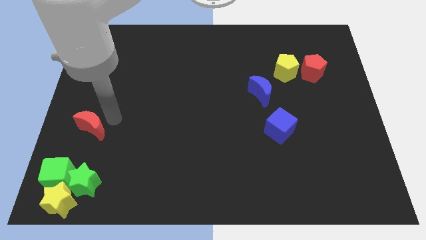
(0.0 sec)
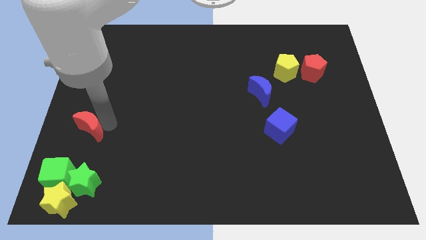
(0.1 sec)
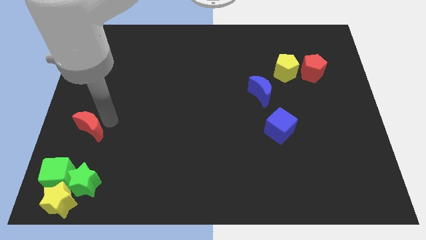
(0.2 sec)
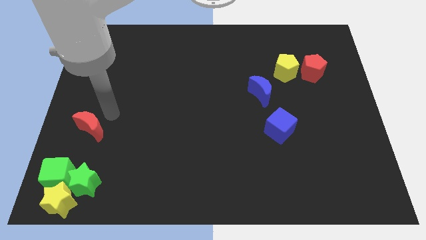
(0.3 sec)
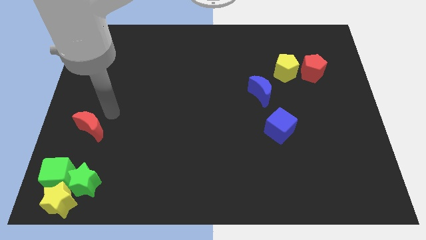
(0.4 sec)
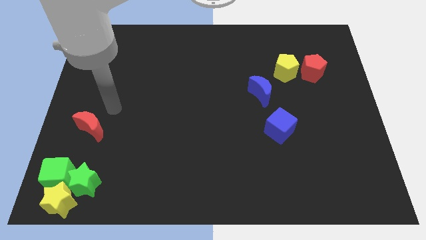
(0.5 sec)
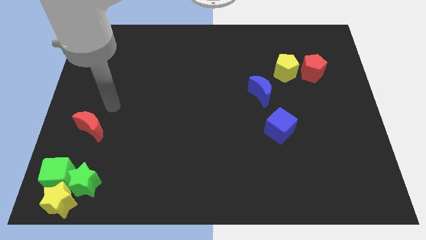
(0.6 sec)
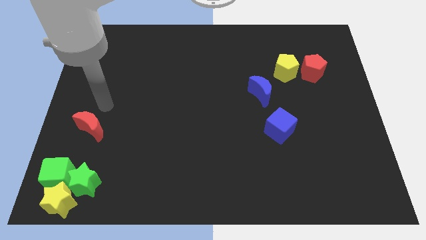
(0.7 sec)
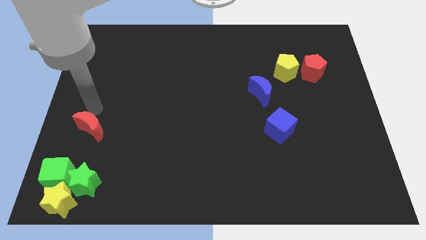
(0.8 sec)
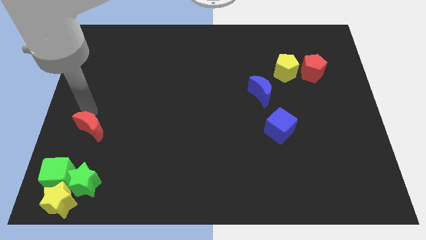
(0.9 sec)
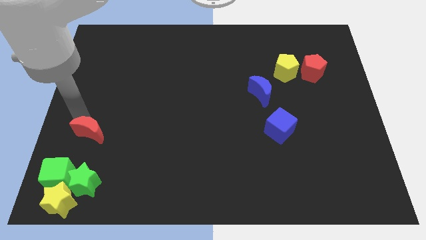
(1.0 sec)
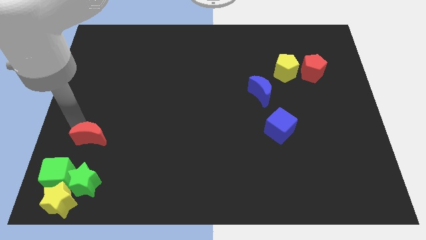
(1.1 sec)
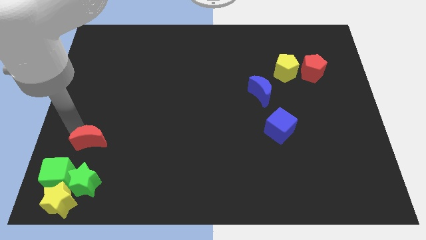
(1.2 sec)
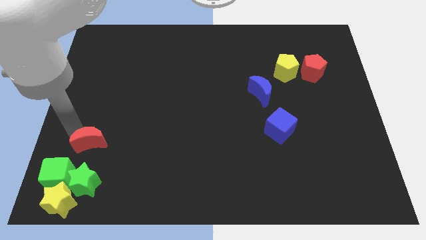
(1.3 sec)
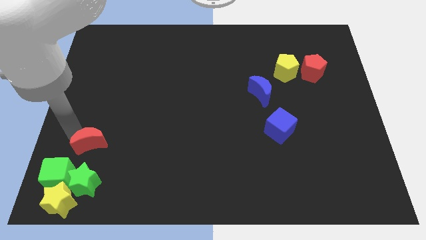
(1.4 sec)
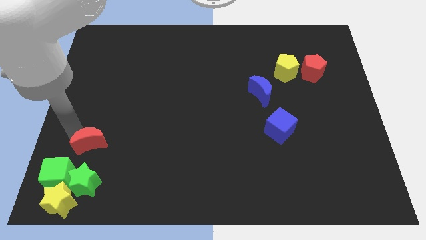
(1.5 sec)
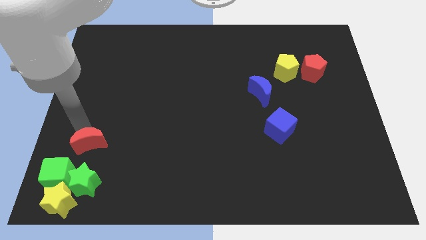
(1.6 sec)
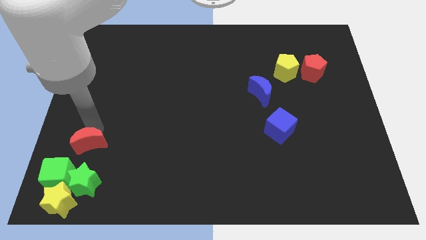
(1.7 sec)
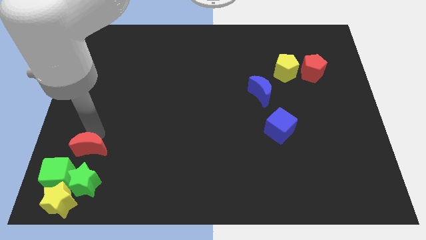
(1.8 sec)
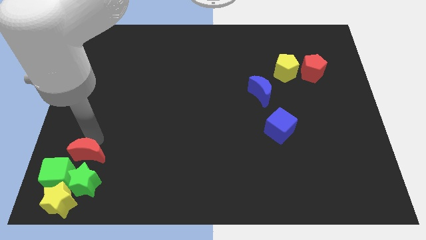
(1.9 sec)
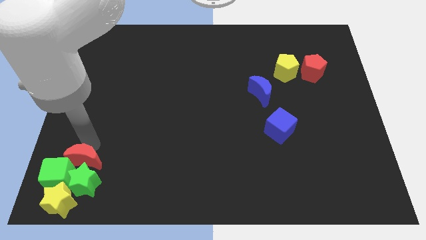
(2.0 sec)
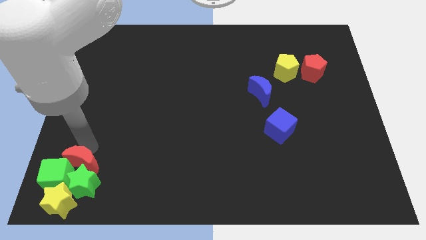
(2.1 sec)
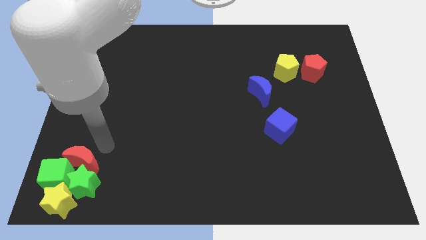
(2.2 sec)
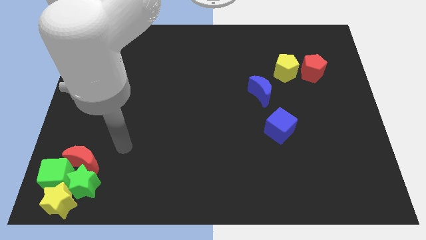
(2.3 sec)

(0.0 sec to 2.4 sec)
push the red crescent into the green blocks

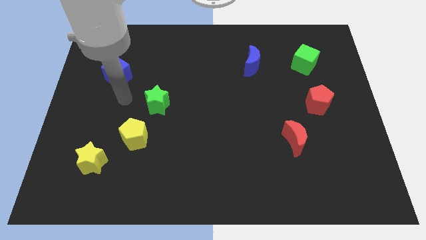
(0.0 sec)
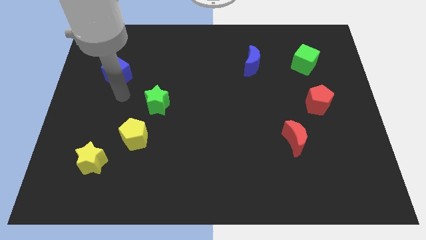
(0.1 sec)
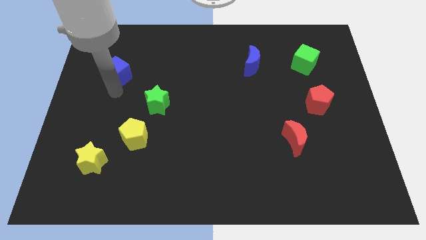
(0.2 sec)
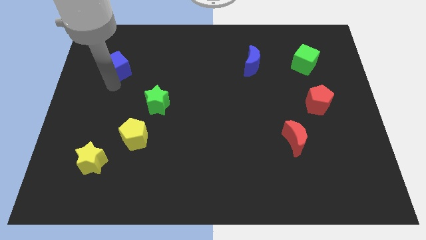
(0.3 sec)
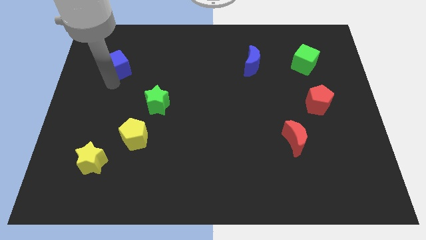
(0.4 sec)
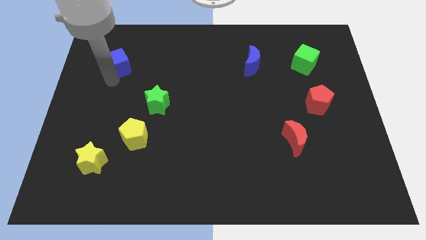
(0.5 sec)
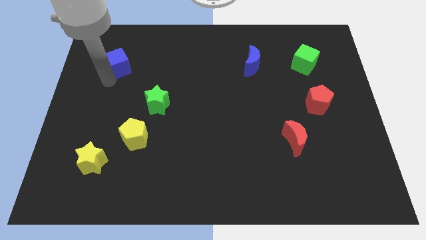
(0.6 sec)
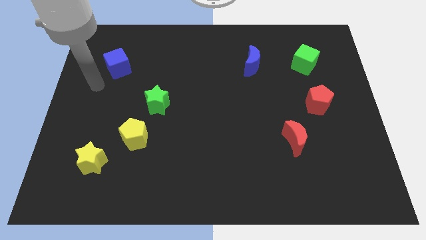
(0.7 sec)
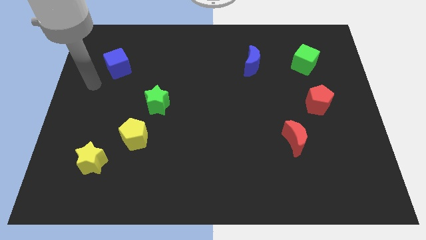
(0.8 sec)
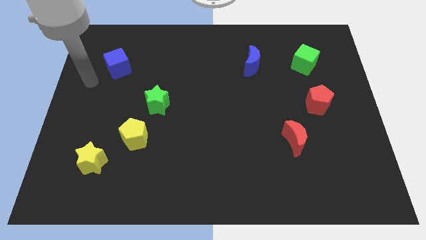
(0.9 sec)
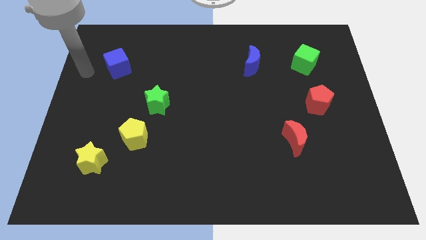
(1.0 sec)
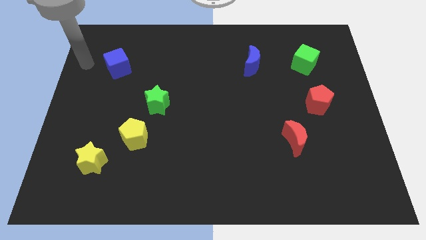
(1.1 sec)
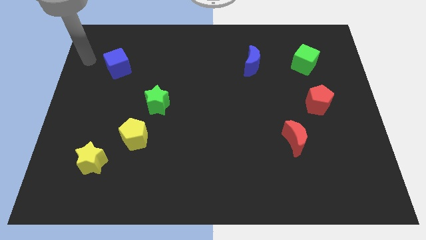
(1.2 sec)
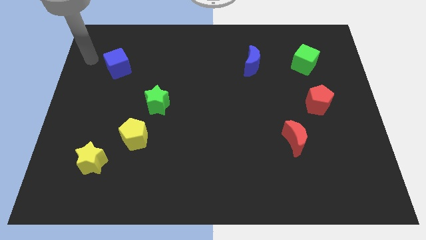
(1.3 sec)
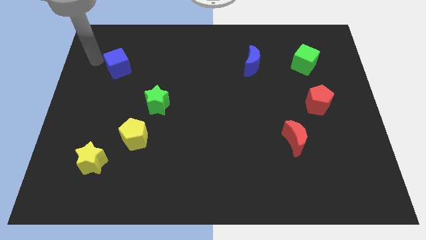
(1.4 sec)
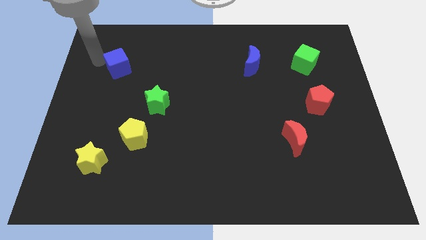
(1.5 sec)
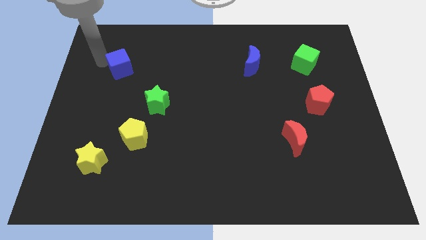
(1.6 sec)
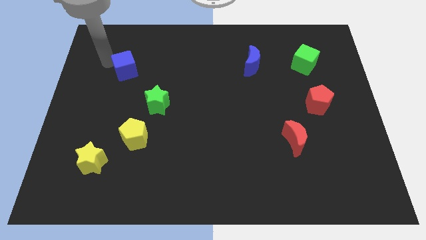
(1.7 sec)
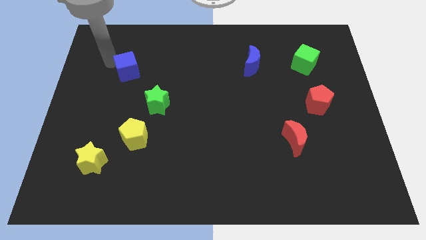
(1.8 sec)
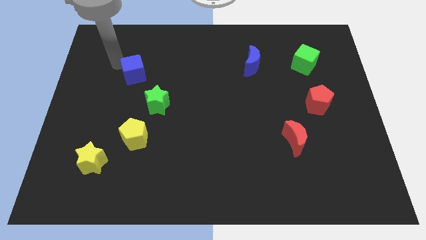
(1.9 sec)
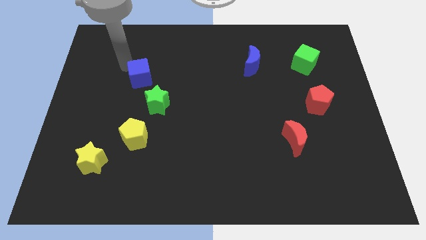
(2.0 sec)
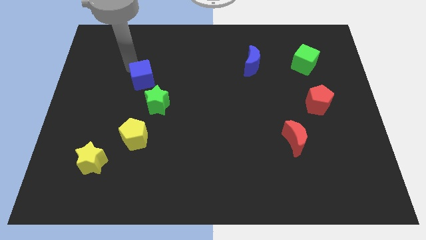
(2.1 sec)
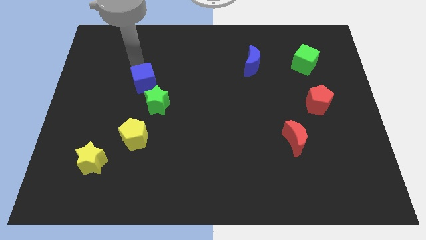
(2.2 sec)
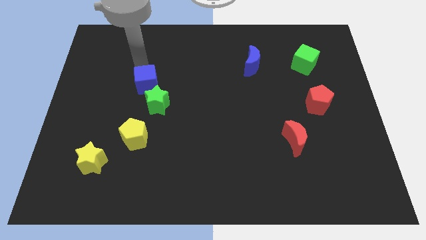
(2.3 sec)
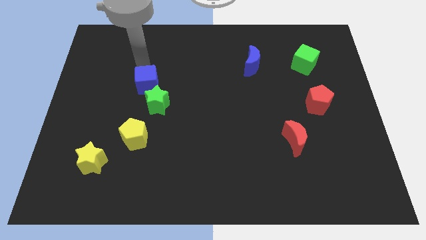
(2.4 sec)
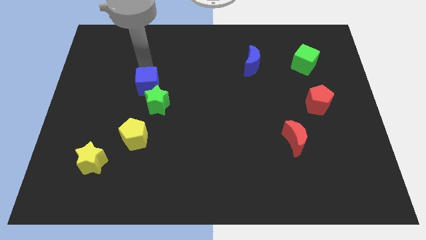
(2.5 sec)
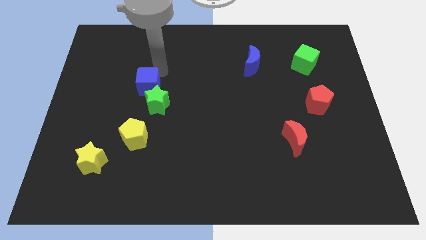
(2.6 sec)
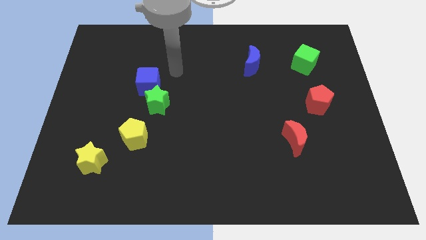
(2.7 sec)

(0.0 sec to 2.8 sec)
move the blue cube close to the green star

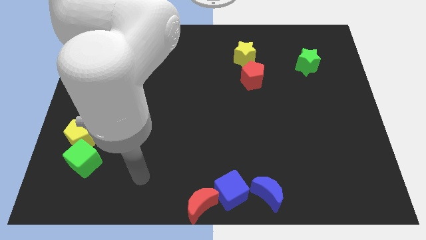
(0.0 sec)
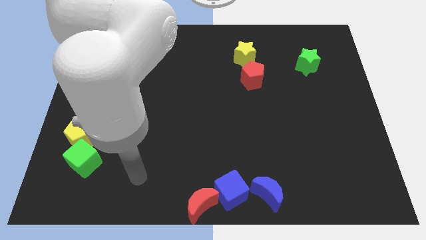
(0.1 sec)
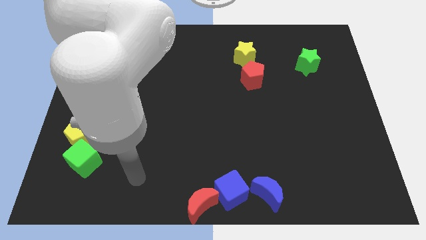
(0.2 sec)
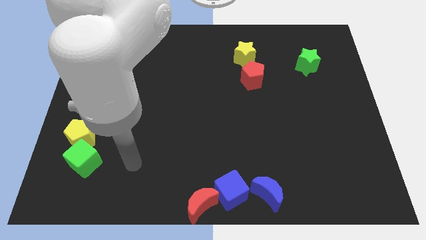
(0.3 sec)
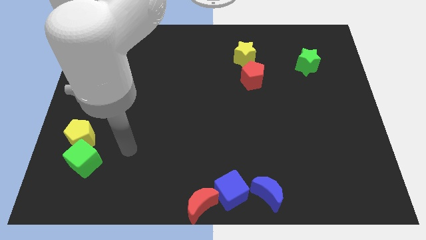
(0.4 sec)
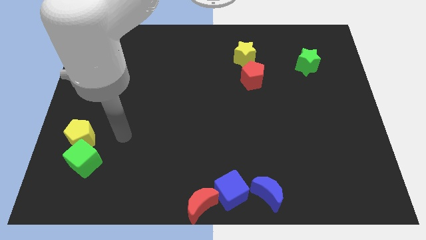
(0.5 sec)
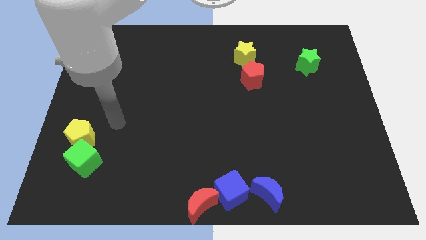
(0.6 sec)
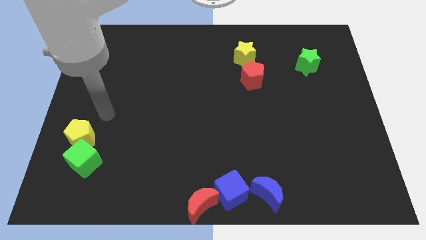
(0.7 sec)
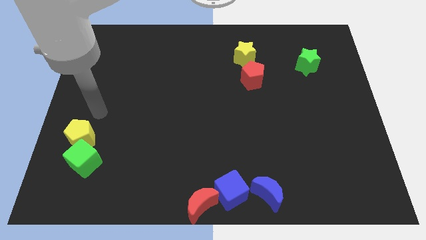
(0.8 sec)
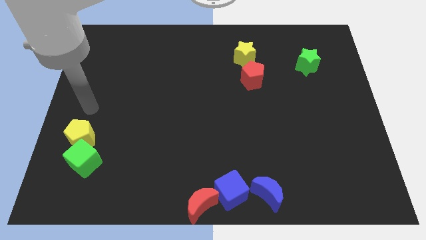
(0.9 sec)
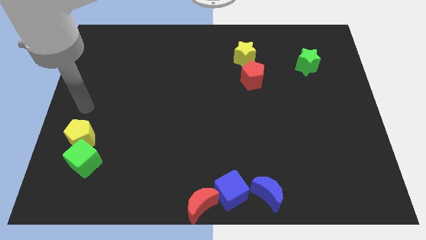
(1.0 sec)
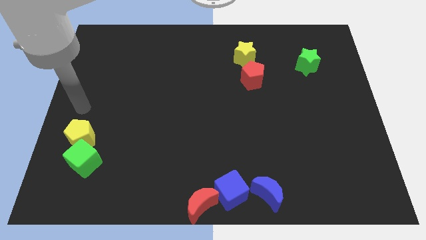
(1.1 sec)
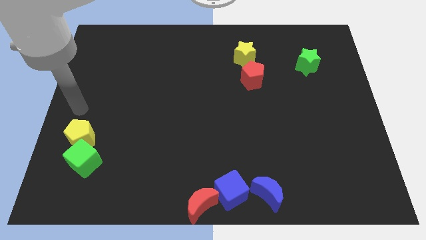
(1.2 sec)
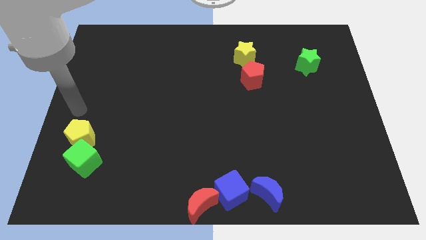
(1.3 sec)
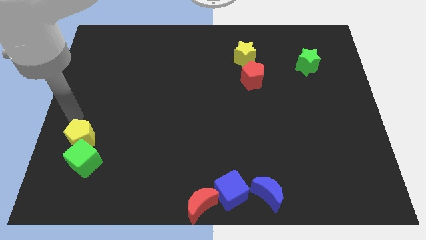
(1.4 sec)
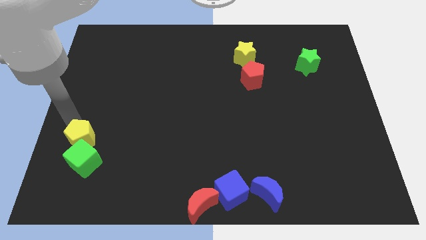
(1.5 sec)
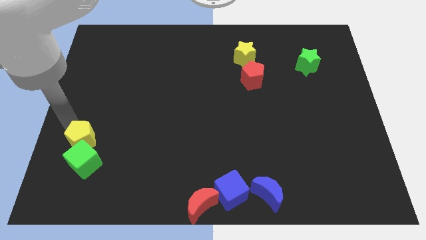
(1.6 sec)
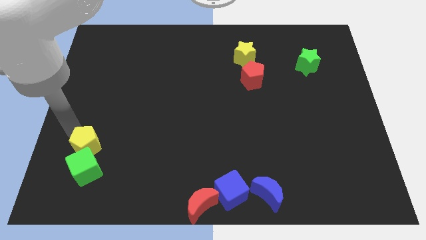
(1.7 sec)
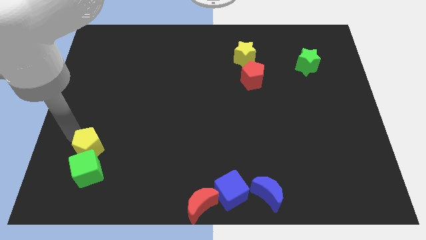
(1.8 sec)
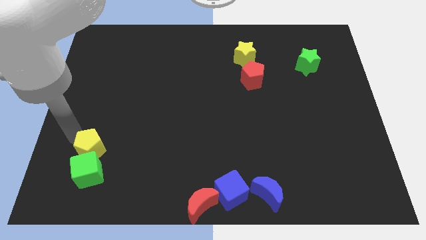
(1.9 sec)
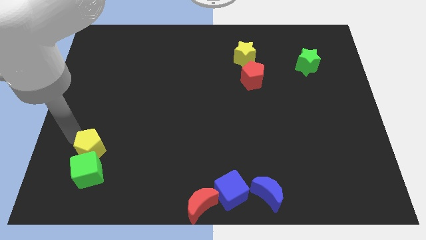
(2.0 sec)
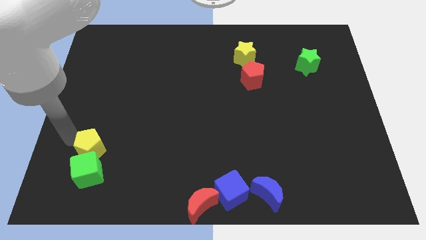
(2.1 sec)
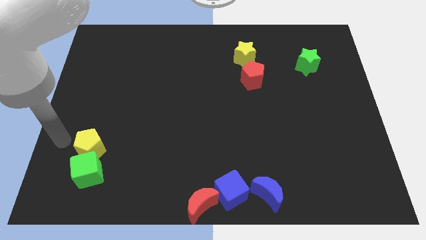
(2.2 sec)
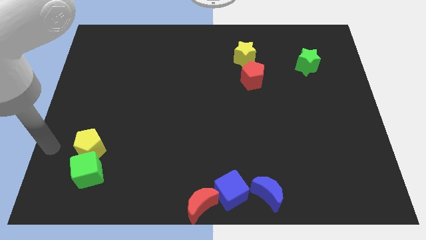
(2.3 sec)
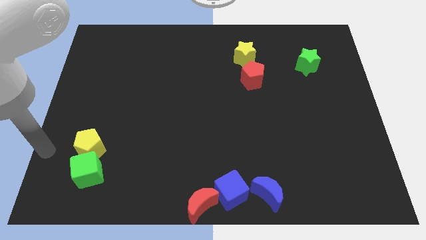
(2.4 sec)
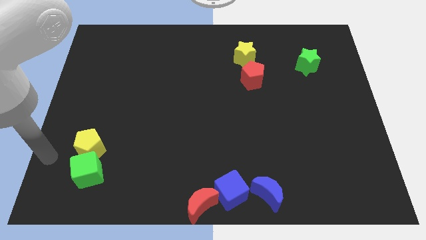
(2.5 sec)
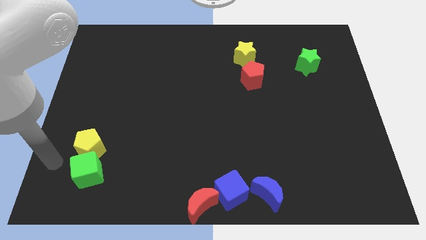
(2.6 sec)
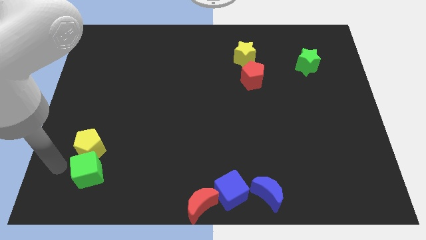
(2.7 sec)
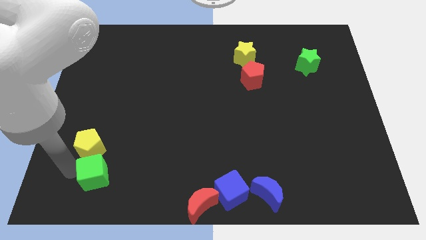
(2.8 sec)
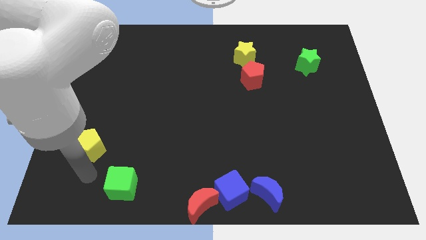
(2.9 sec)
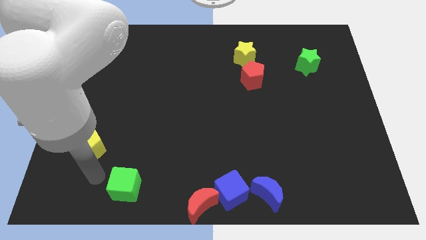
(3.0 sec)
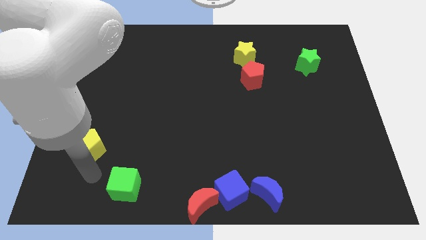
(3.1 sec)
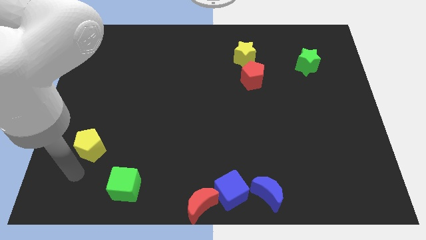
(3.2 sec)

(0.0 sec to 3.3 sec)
push the green cube to the right side of the board

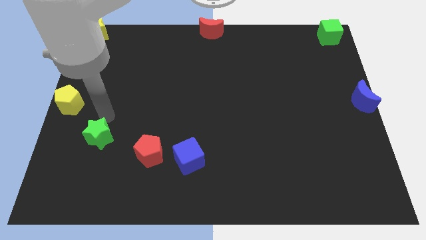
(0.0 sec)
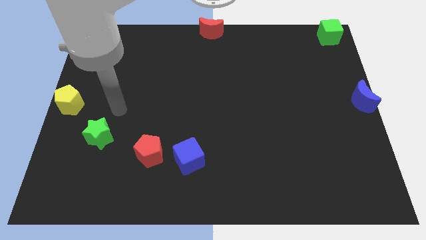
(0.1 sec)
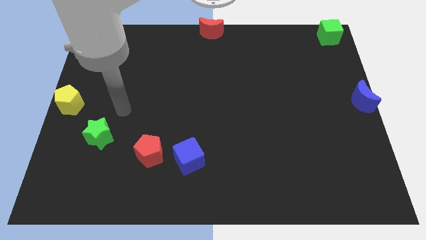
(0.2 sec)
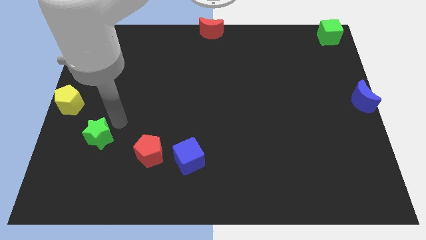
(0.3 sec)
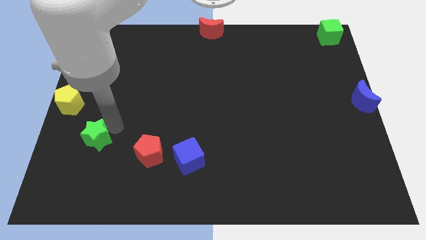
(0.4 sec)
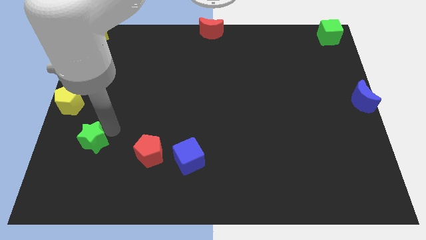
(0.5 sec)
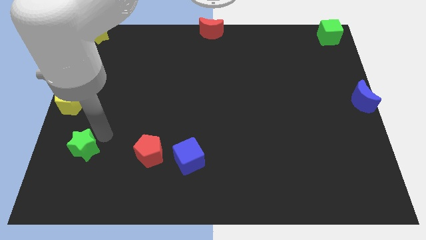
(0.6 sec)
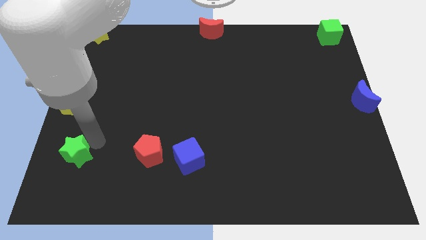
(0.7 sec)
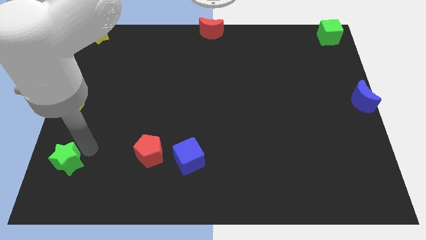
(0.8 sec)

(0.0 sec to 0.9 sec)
place the green star to the left of the red pentagon
